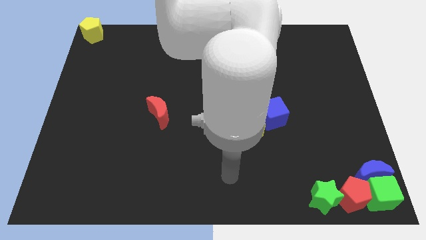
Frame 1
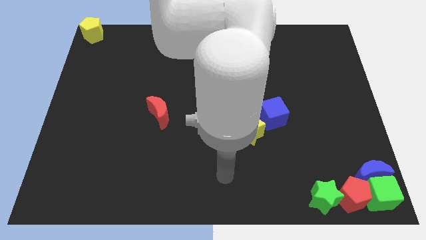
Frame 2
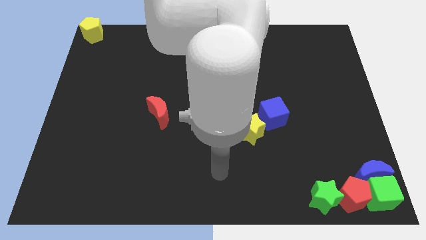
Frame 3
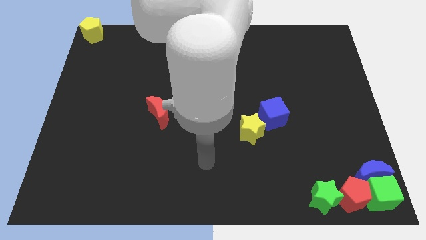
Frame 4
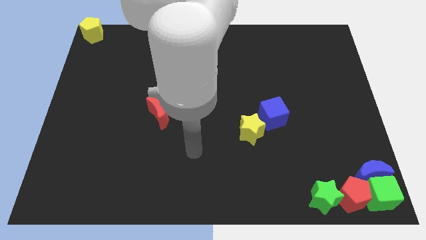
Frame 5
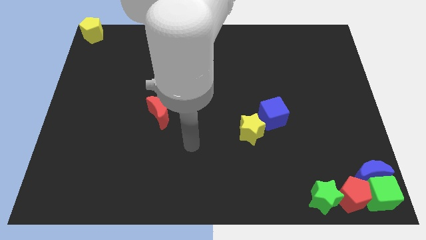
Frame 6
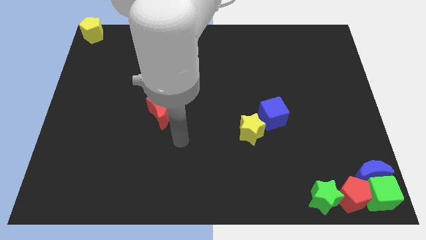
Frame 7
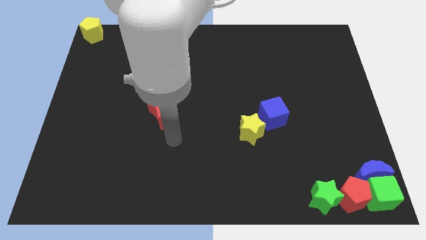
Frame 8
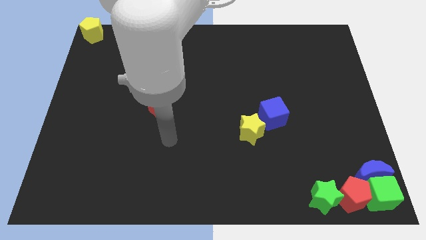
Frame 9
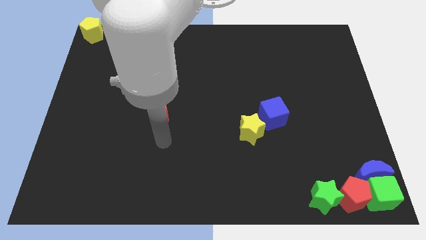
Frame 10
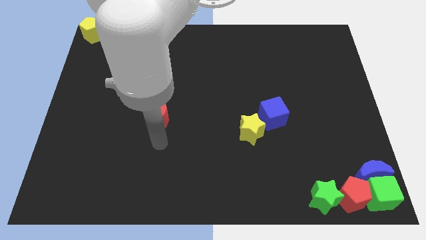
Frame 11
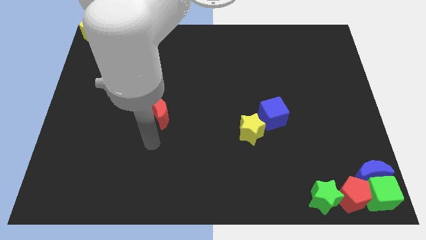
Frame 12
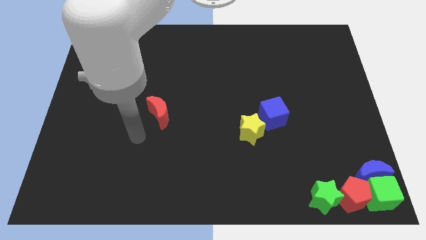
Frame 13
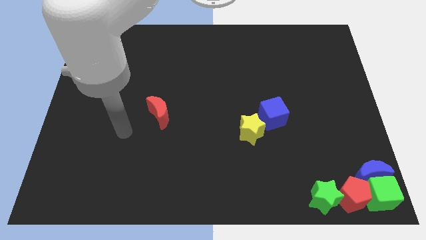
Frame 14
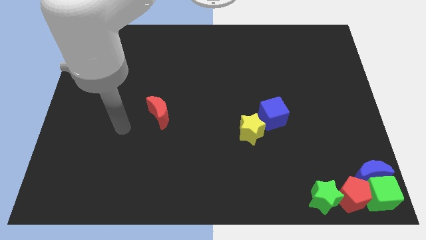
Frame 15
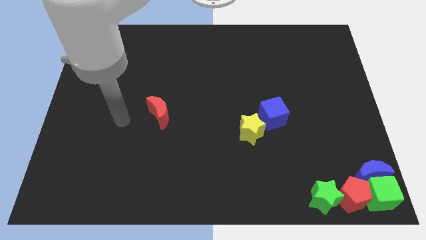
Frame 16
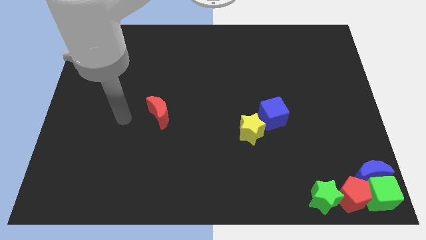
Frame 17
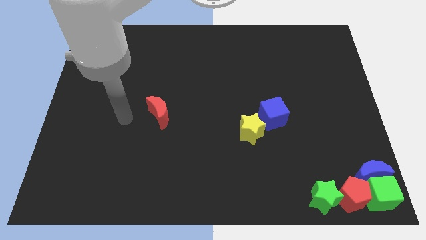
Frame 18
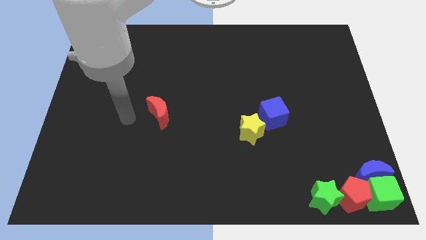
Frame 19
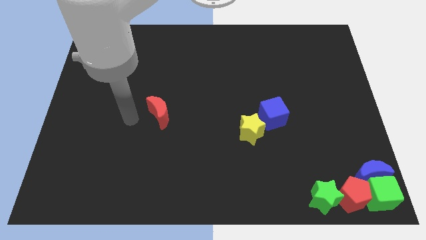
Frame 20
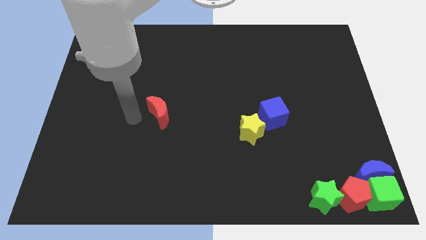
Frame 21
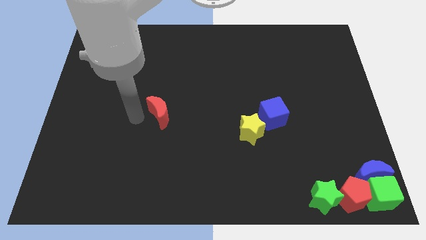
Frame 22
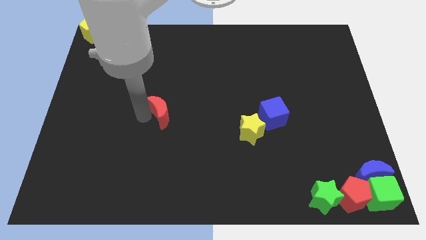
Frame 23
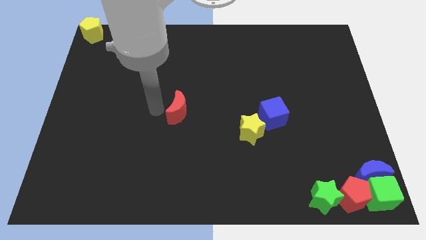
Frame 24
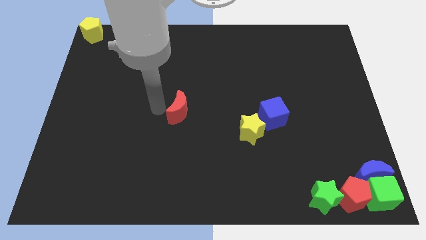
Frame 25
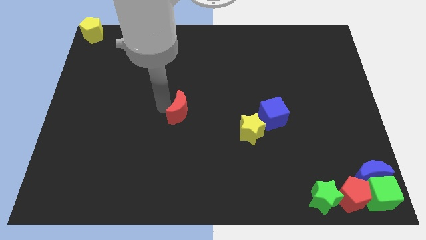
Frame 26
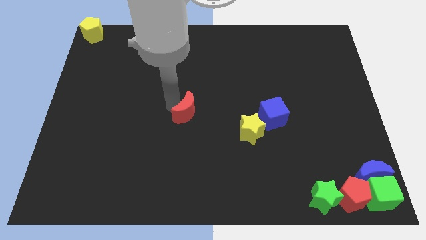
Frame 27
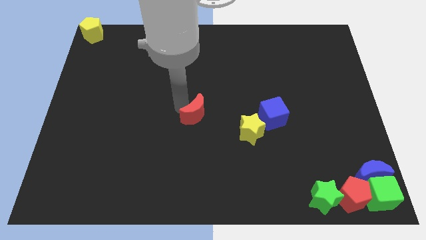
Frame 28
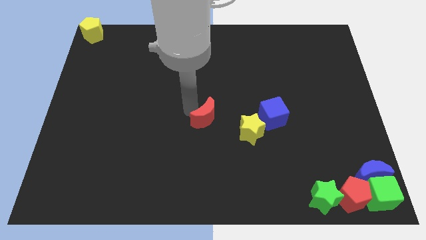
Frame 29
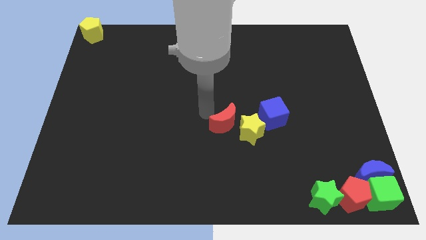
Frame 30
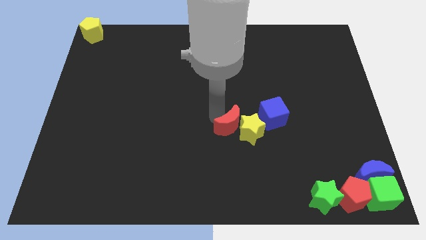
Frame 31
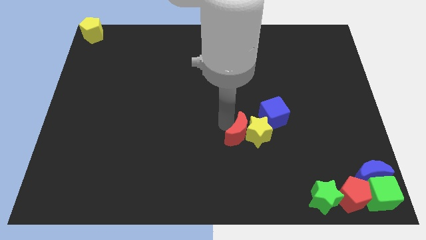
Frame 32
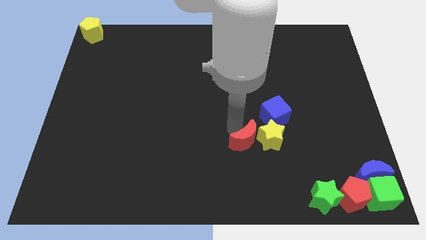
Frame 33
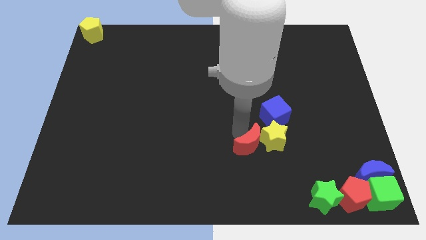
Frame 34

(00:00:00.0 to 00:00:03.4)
push red moon in yellow star

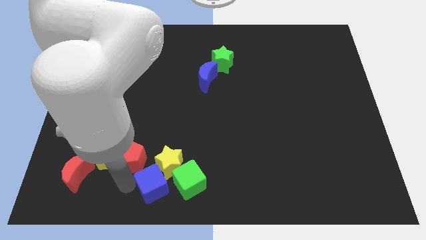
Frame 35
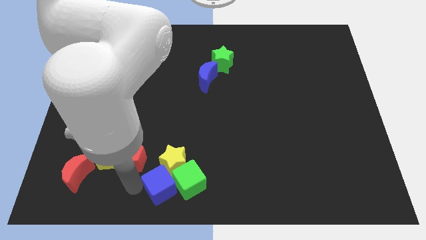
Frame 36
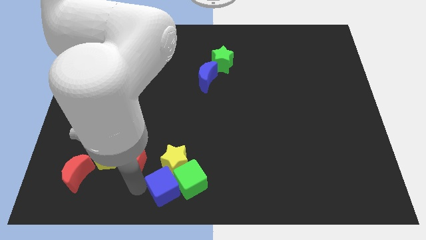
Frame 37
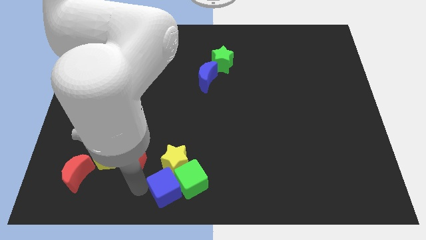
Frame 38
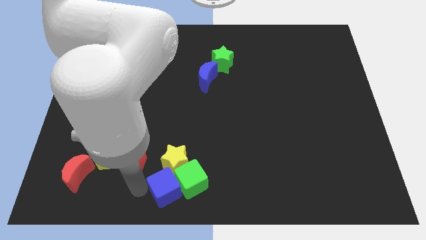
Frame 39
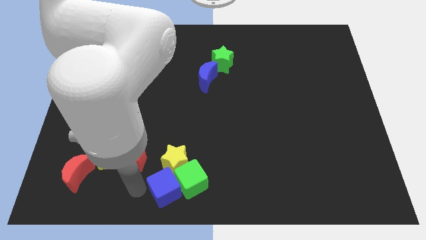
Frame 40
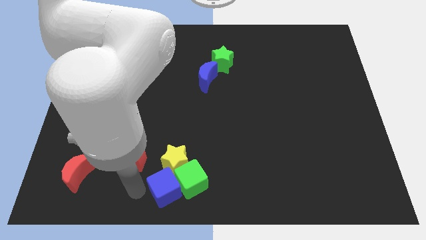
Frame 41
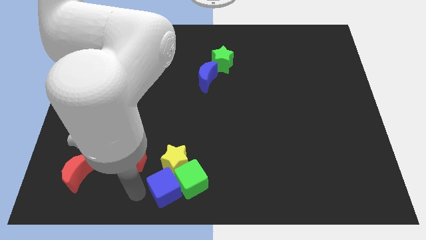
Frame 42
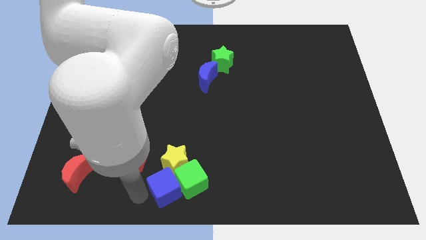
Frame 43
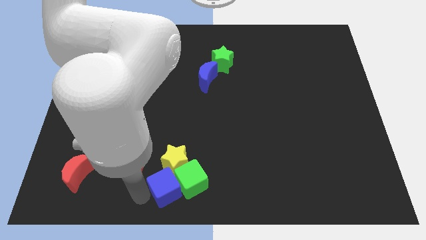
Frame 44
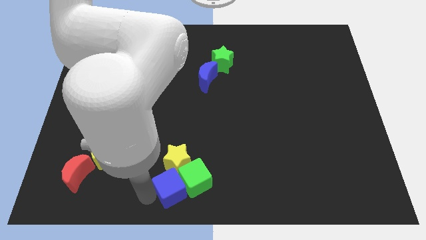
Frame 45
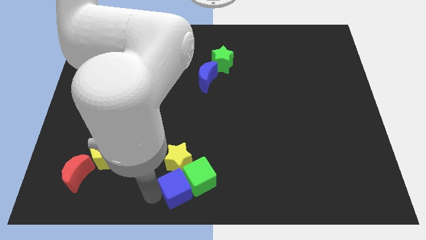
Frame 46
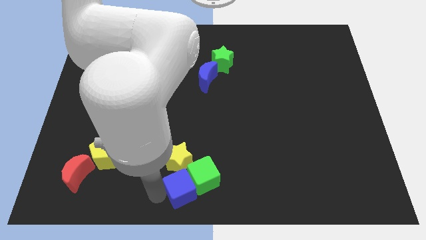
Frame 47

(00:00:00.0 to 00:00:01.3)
push the blue cube and green cube slightly right side

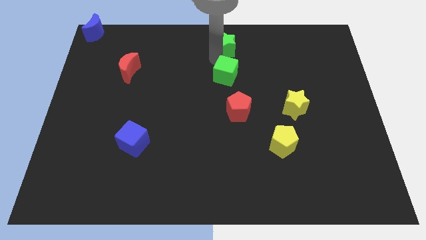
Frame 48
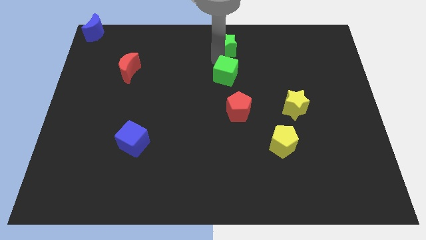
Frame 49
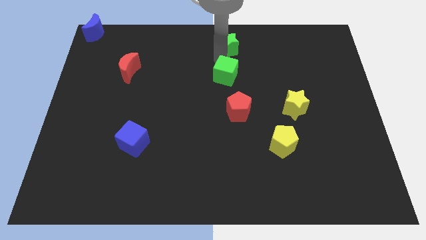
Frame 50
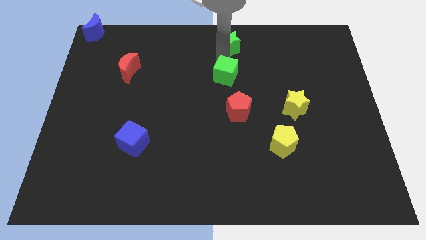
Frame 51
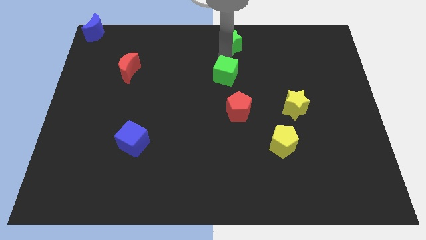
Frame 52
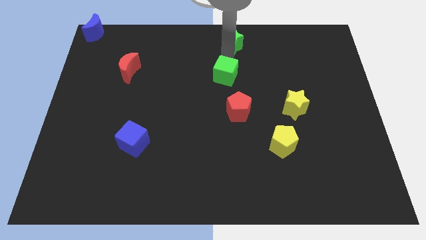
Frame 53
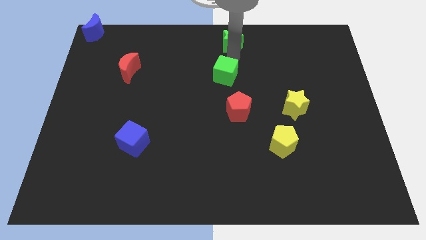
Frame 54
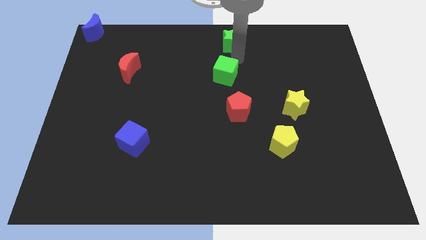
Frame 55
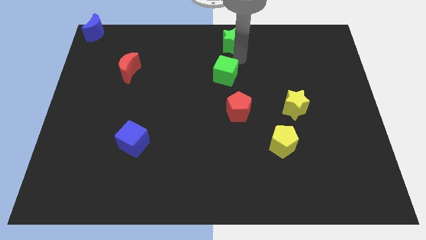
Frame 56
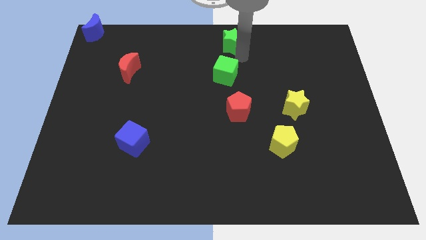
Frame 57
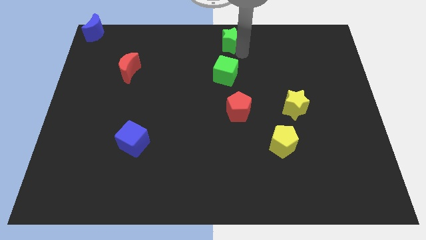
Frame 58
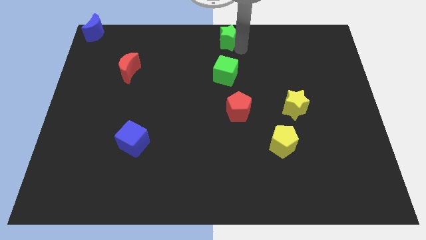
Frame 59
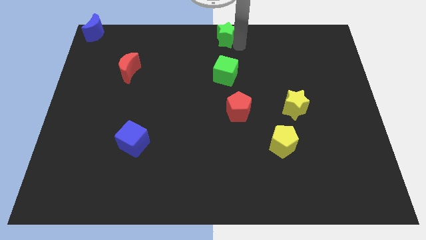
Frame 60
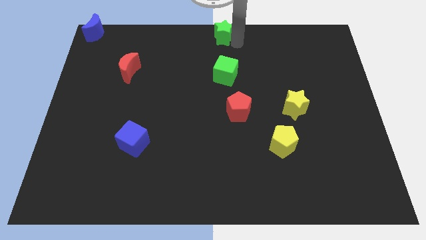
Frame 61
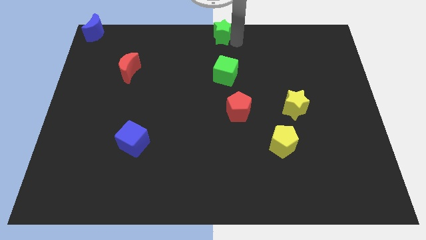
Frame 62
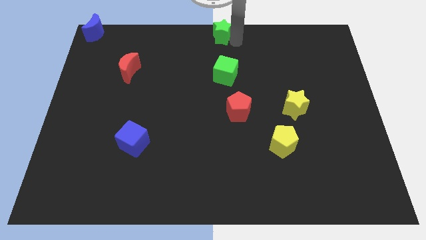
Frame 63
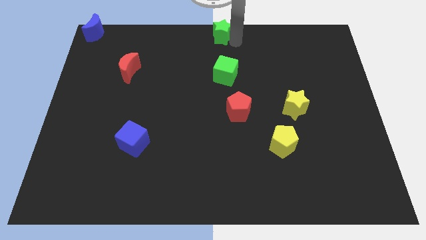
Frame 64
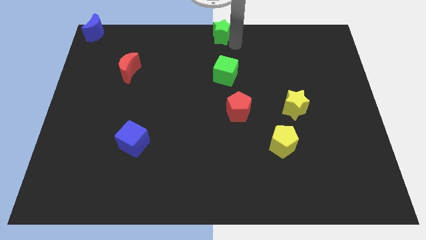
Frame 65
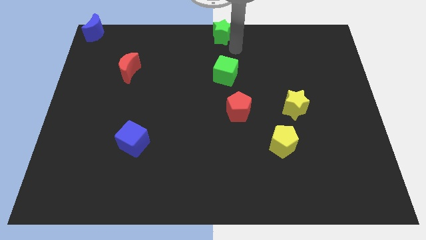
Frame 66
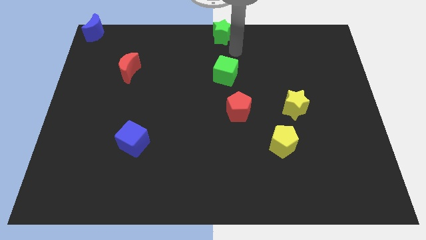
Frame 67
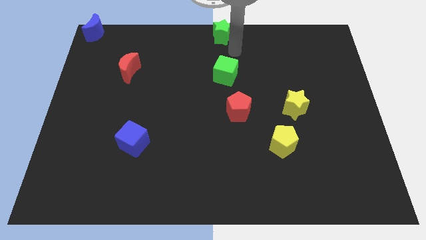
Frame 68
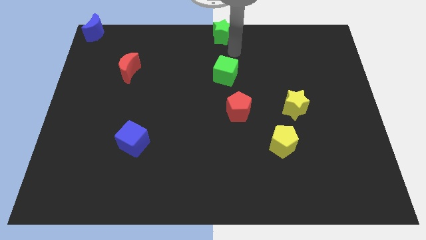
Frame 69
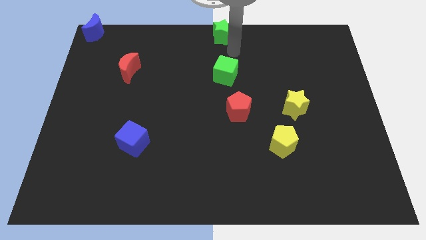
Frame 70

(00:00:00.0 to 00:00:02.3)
move the green star at the top middle

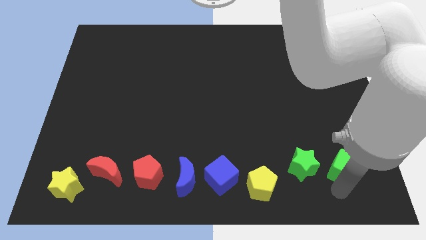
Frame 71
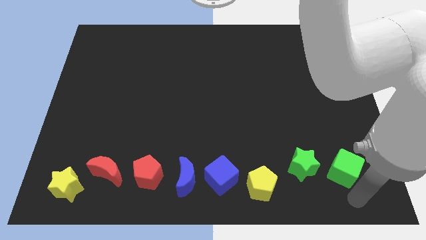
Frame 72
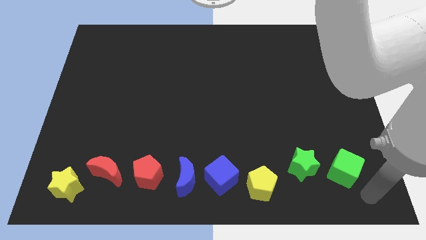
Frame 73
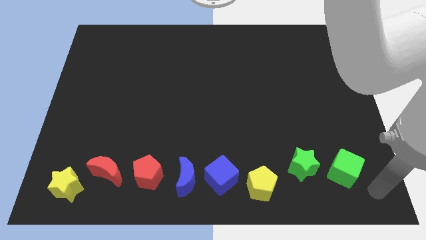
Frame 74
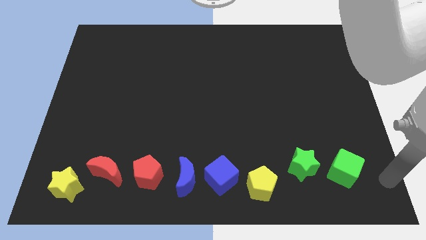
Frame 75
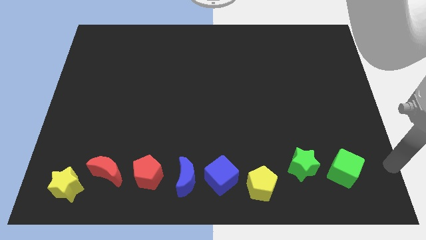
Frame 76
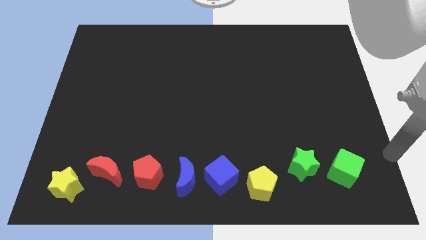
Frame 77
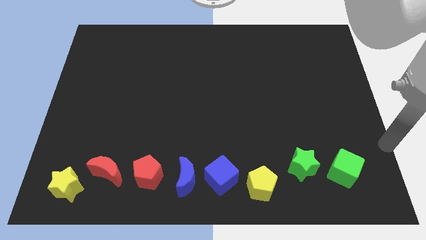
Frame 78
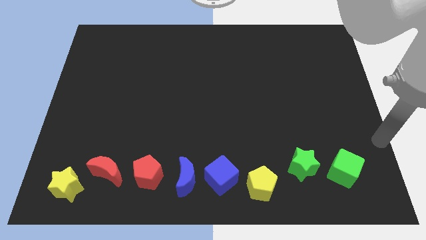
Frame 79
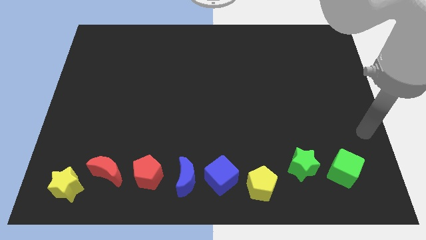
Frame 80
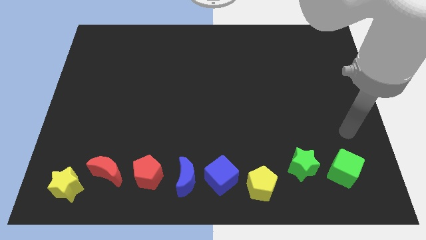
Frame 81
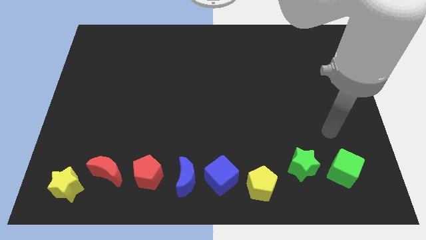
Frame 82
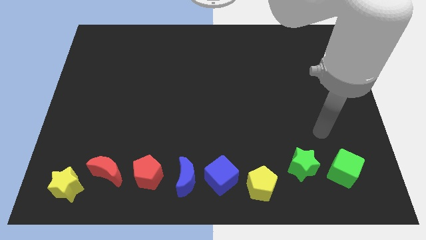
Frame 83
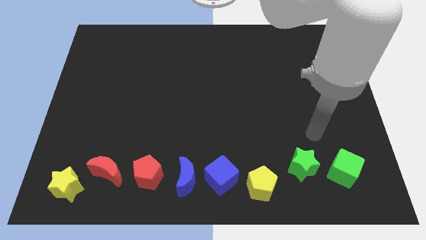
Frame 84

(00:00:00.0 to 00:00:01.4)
move your arm away from the green cube

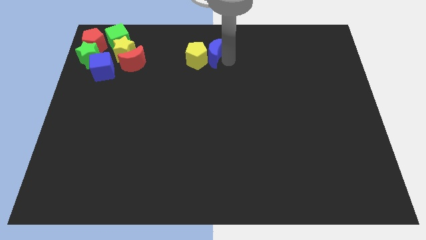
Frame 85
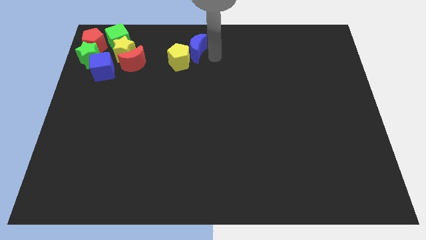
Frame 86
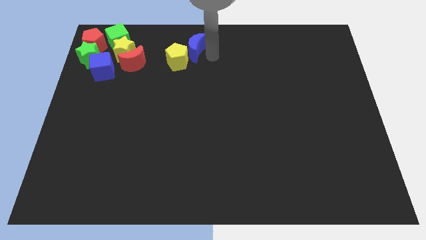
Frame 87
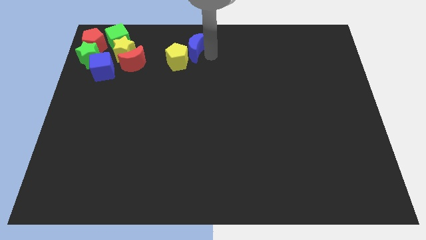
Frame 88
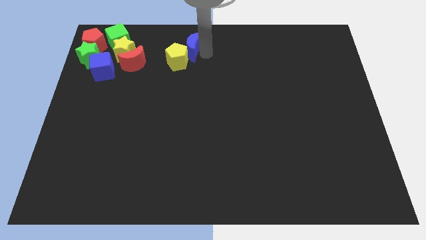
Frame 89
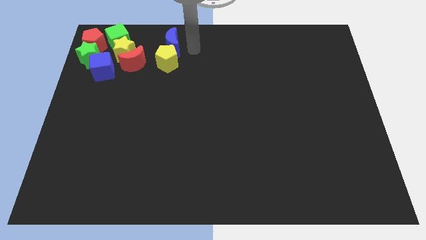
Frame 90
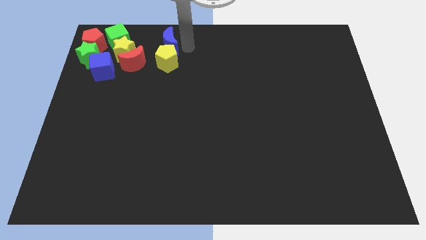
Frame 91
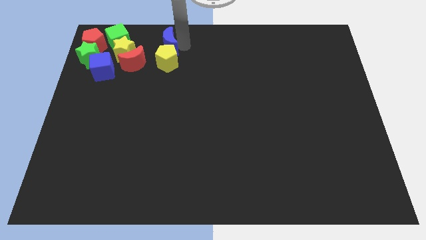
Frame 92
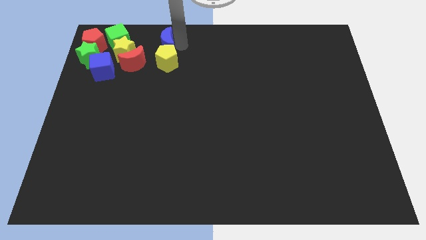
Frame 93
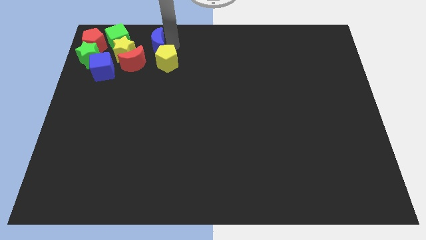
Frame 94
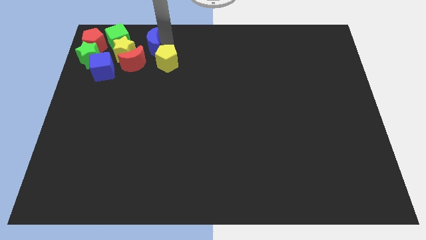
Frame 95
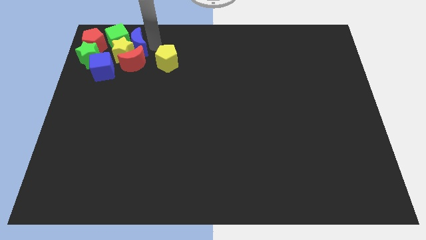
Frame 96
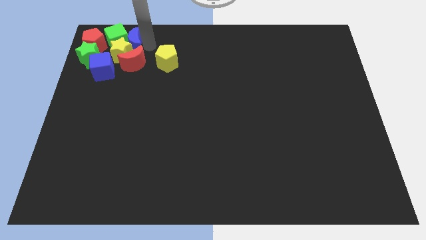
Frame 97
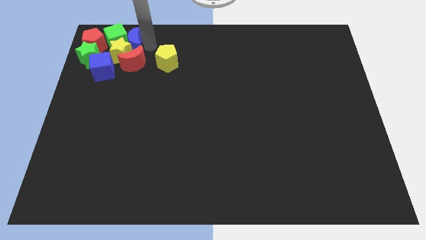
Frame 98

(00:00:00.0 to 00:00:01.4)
move the blue crescent to the bottom right side of the green cube on the board
